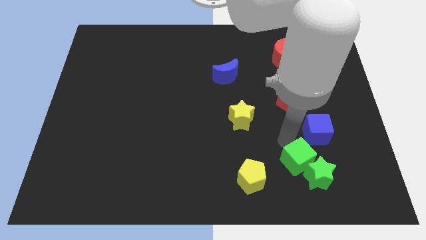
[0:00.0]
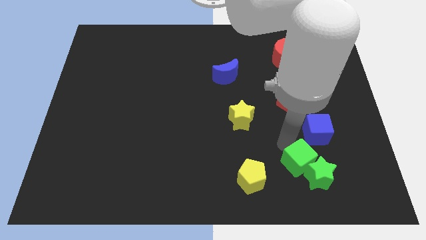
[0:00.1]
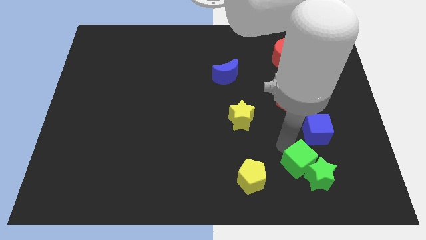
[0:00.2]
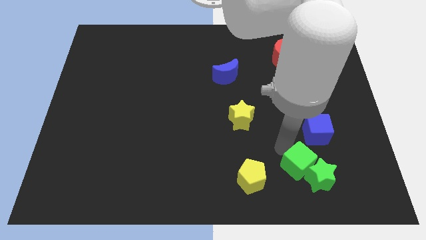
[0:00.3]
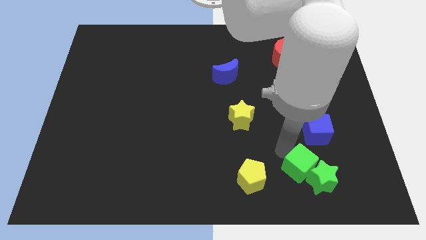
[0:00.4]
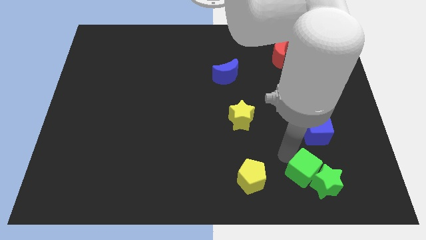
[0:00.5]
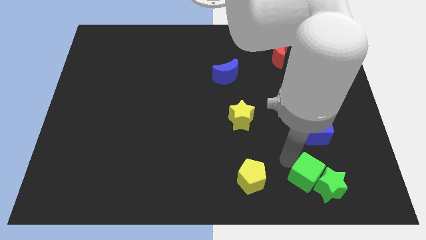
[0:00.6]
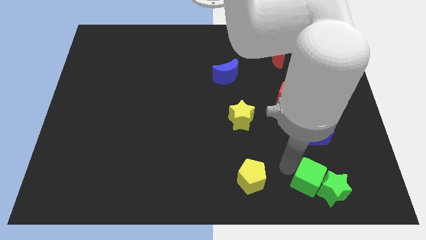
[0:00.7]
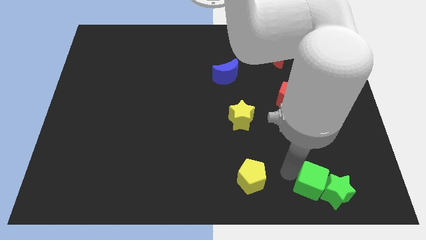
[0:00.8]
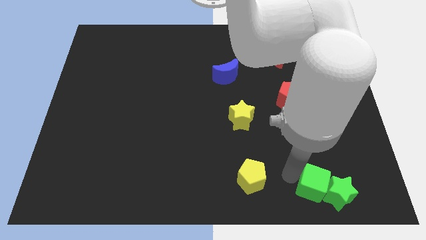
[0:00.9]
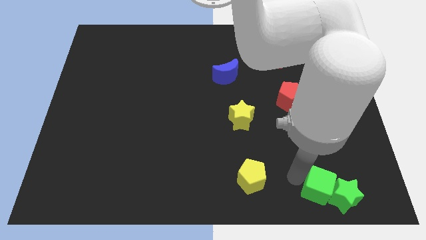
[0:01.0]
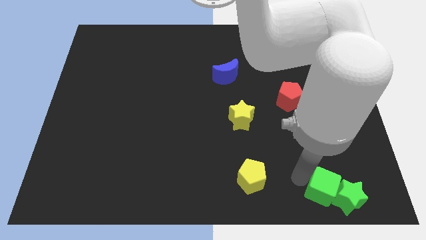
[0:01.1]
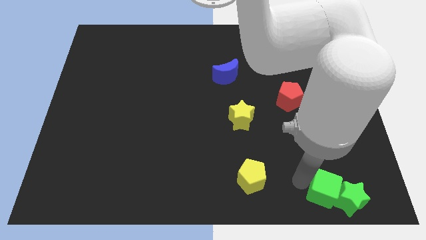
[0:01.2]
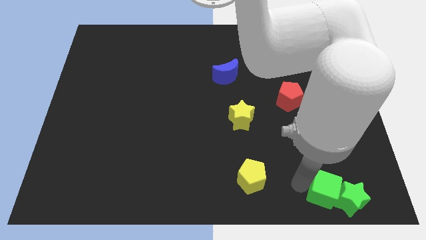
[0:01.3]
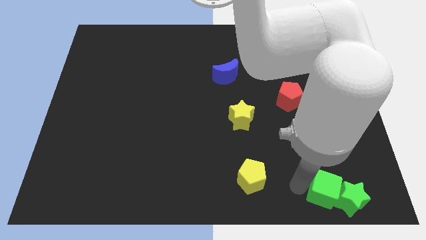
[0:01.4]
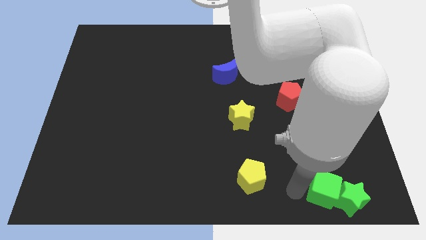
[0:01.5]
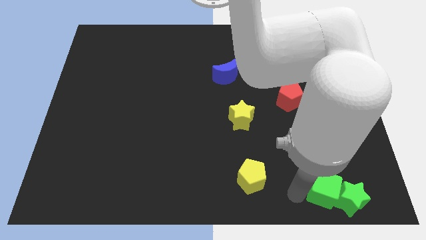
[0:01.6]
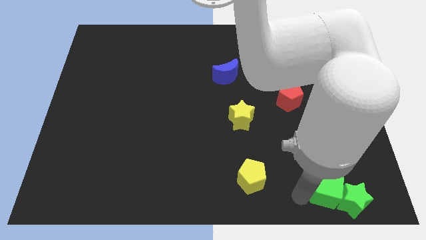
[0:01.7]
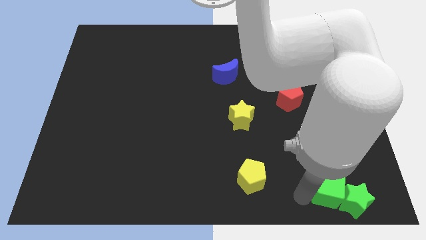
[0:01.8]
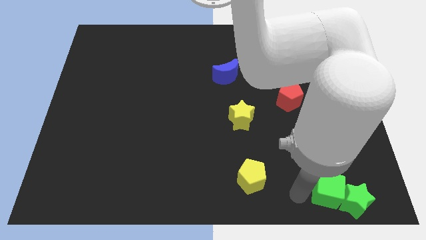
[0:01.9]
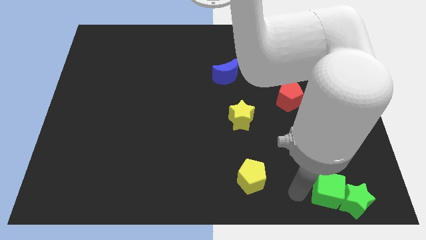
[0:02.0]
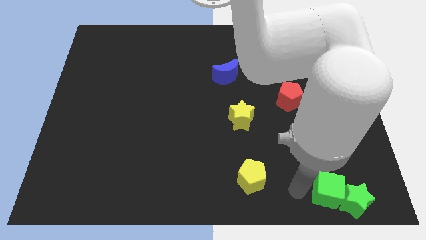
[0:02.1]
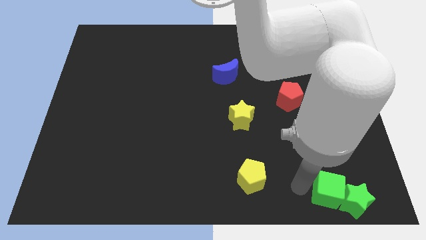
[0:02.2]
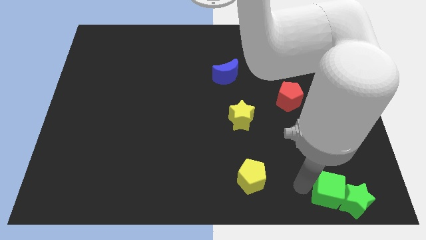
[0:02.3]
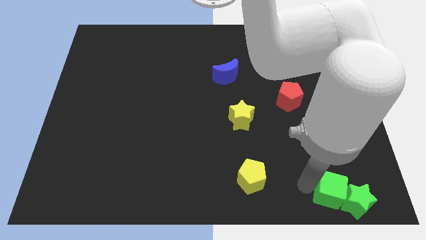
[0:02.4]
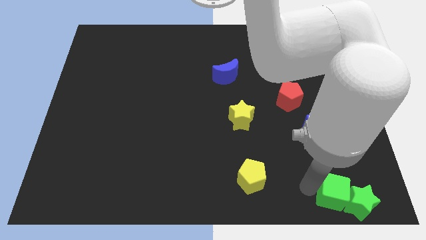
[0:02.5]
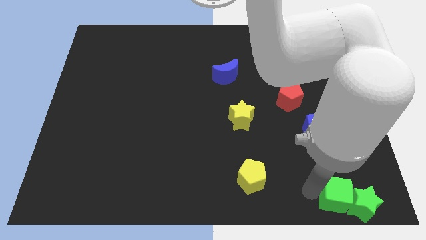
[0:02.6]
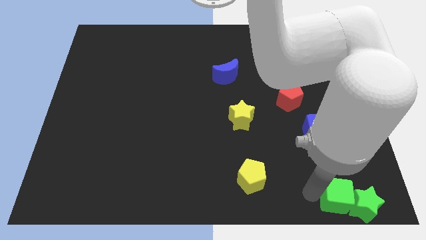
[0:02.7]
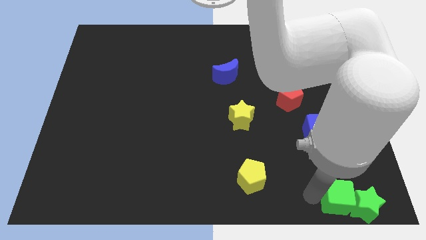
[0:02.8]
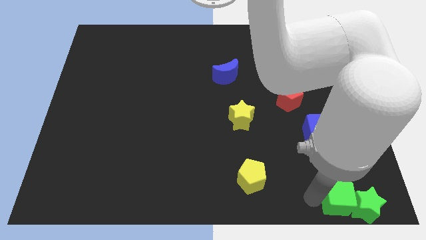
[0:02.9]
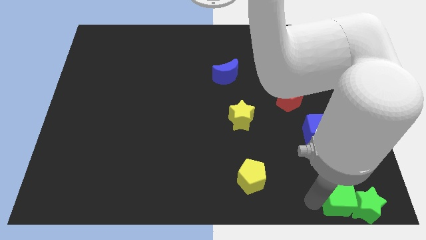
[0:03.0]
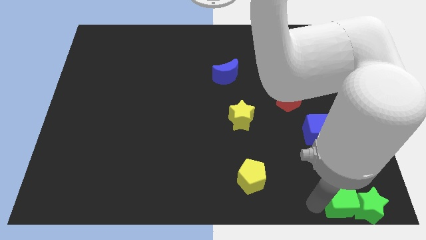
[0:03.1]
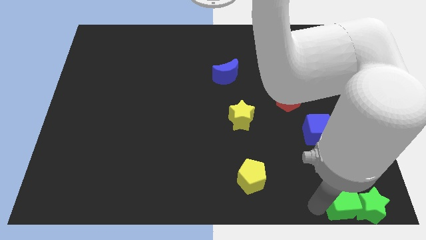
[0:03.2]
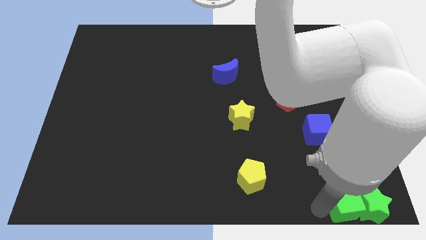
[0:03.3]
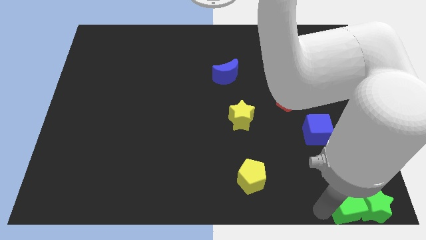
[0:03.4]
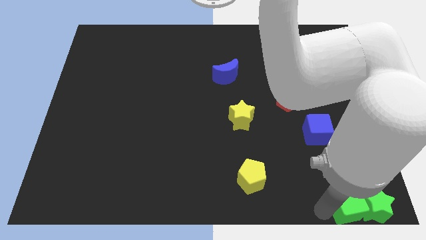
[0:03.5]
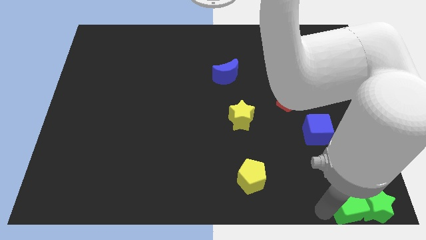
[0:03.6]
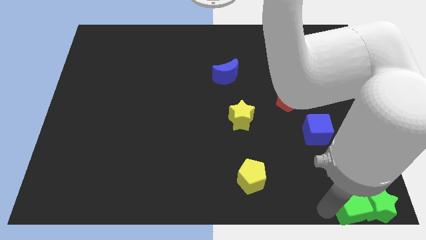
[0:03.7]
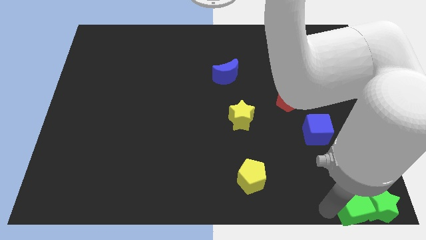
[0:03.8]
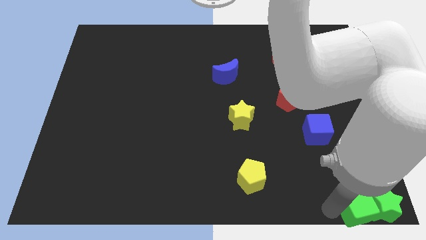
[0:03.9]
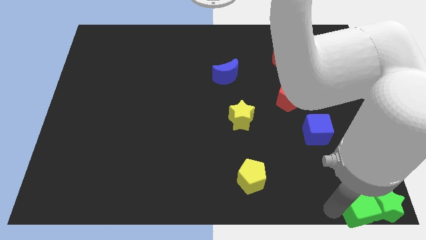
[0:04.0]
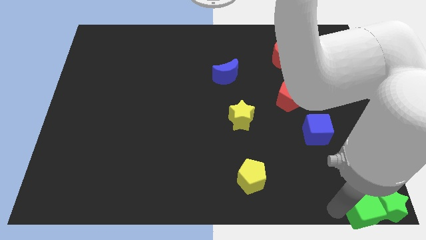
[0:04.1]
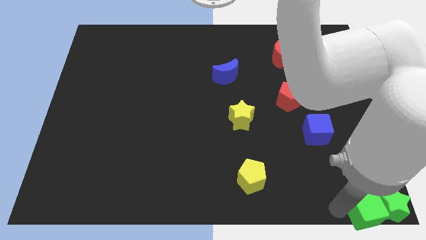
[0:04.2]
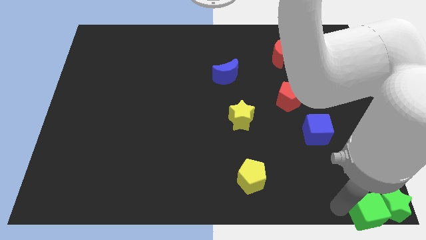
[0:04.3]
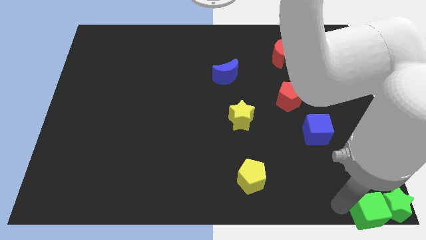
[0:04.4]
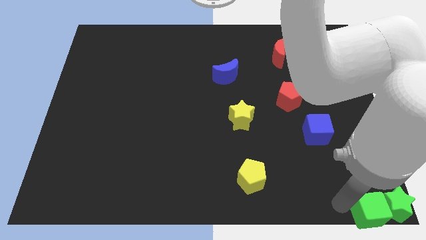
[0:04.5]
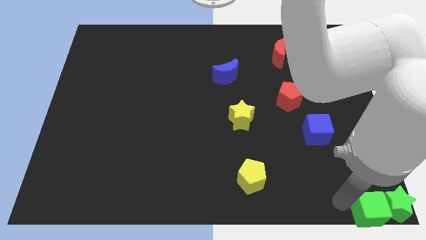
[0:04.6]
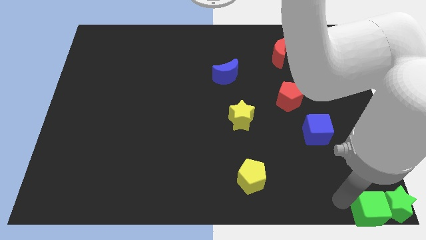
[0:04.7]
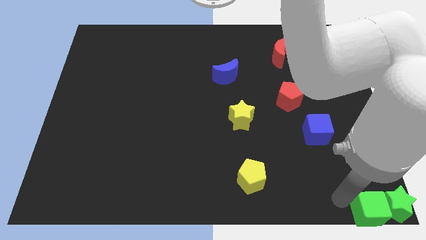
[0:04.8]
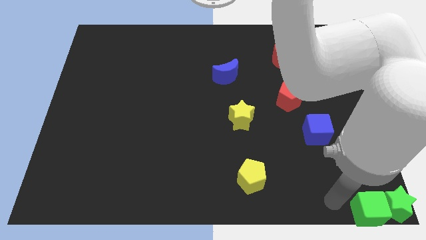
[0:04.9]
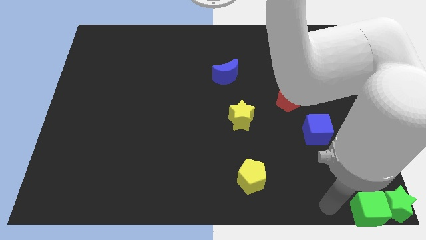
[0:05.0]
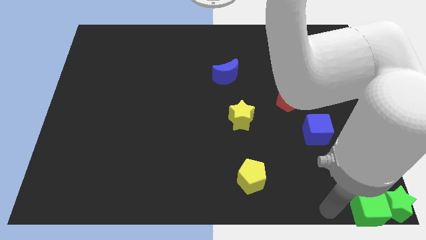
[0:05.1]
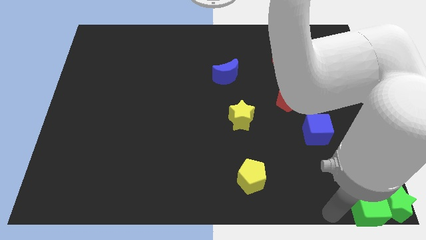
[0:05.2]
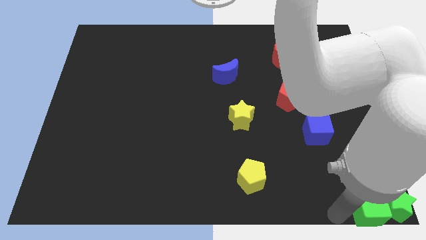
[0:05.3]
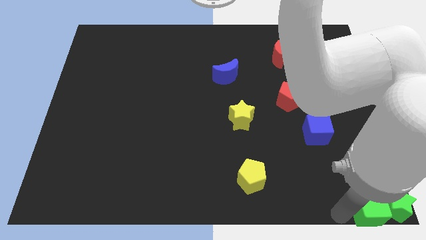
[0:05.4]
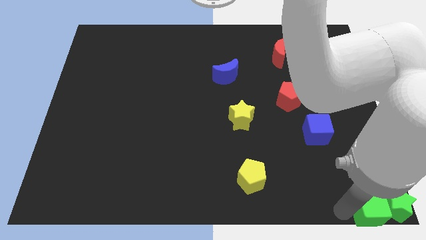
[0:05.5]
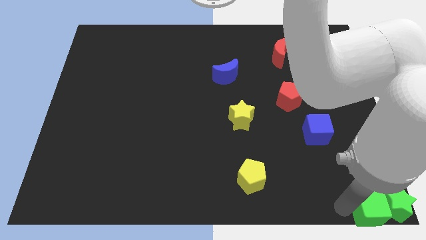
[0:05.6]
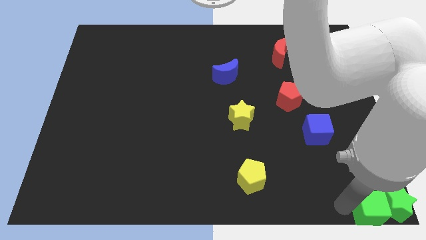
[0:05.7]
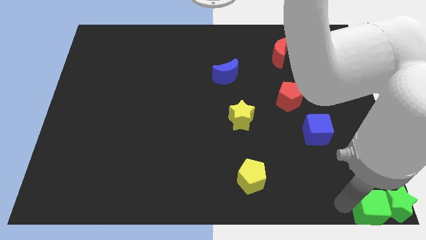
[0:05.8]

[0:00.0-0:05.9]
move the green blocks together to the bottom right corner of the board

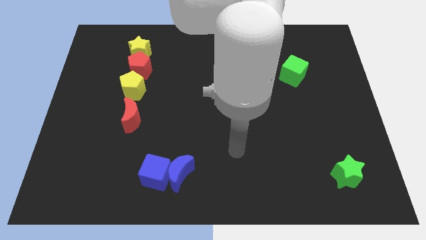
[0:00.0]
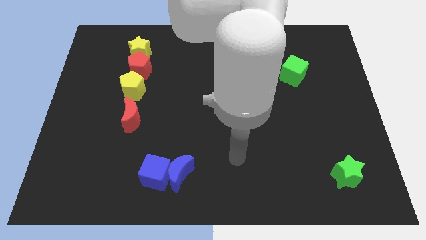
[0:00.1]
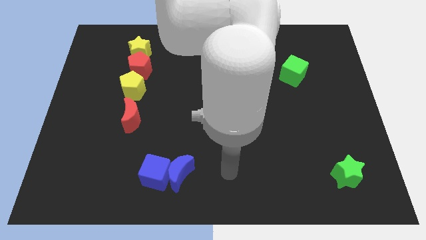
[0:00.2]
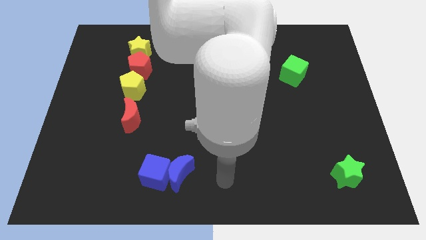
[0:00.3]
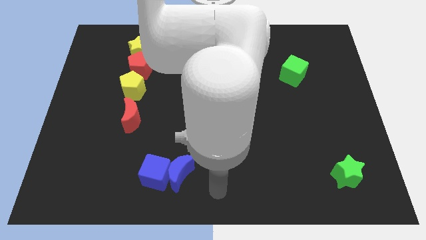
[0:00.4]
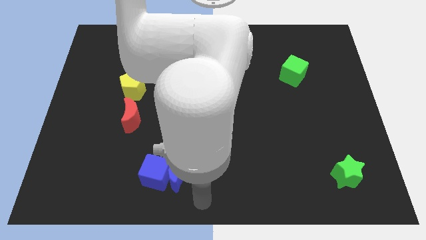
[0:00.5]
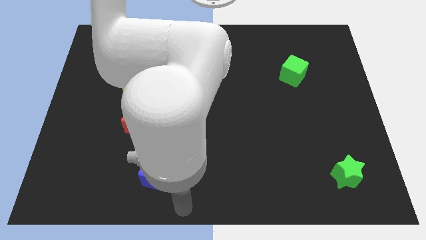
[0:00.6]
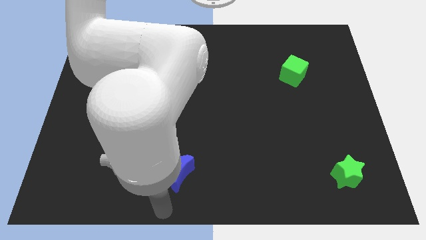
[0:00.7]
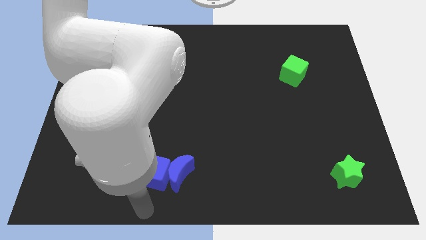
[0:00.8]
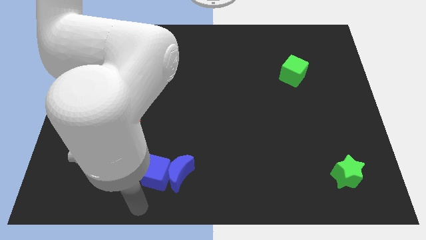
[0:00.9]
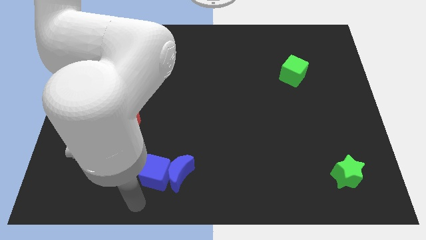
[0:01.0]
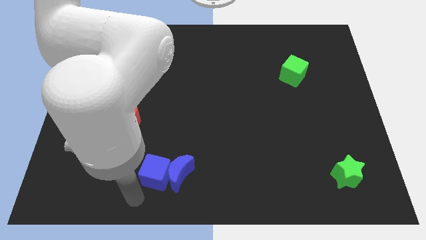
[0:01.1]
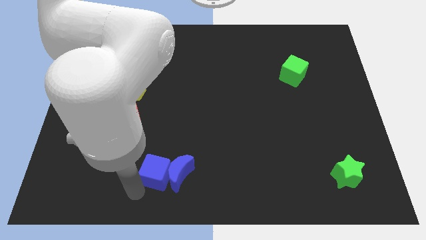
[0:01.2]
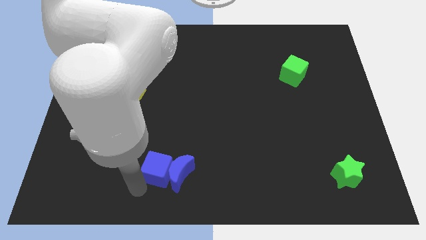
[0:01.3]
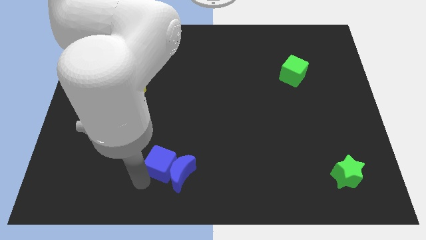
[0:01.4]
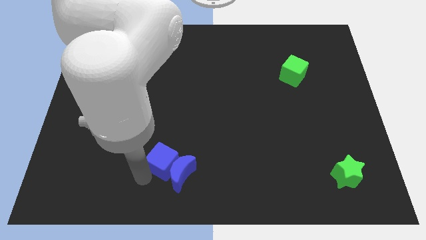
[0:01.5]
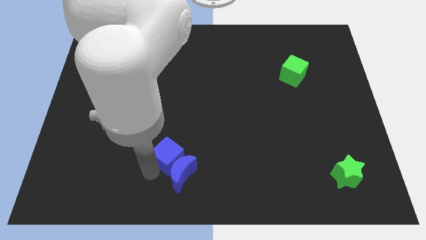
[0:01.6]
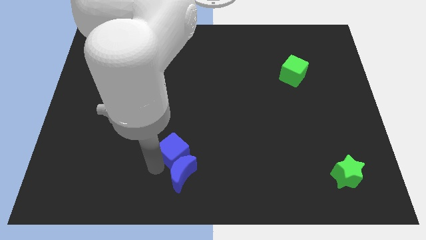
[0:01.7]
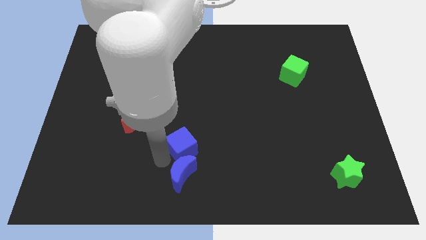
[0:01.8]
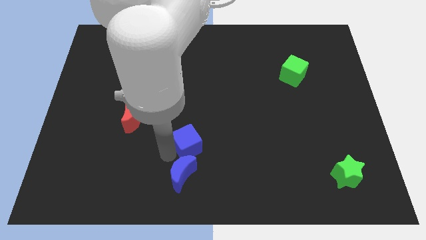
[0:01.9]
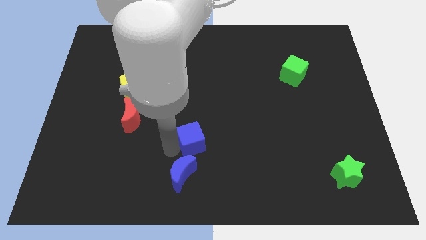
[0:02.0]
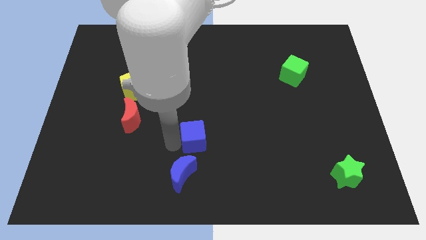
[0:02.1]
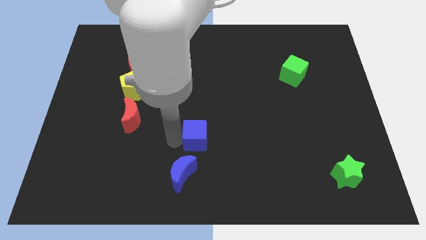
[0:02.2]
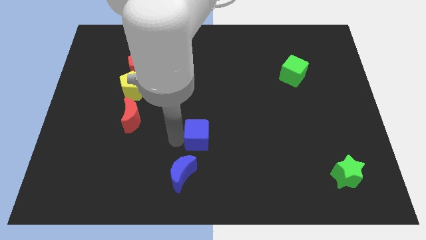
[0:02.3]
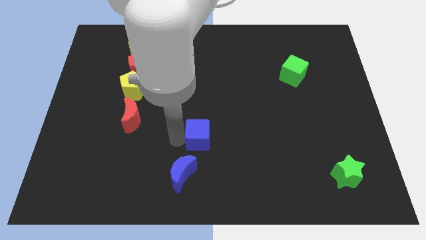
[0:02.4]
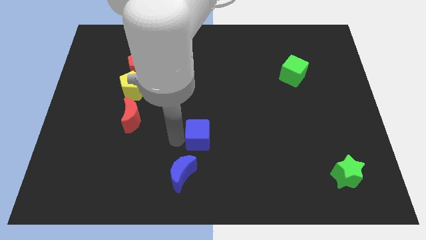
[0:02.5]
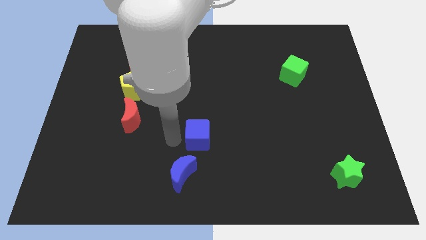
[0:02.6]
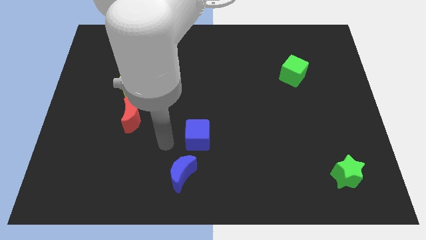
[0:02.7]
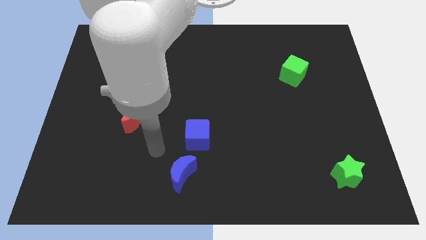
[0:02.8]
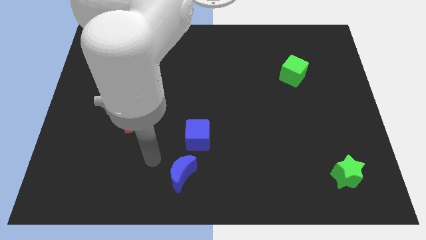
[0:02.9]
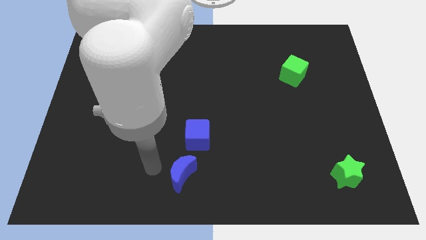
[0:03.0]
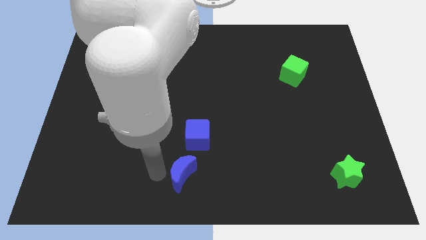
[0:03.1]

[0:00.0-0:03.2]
seperate blue cube and blue moon
